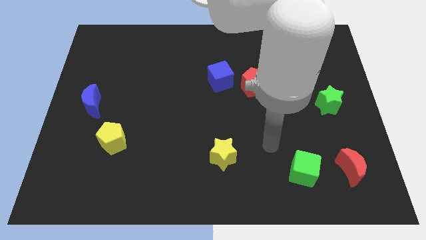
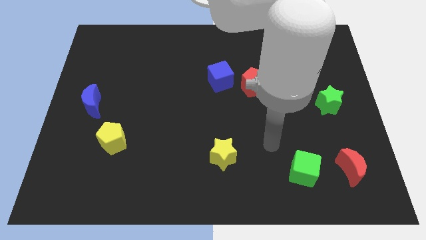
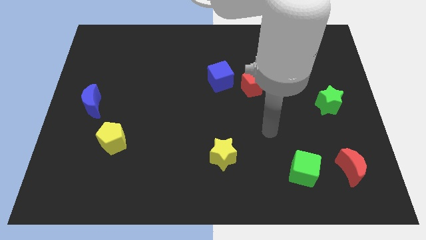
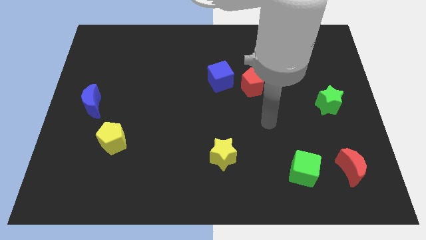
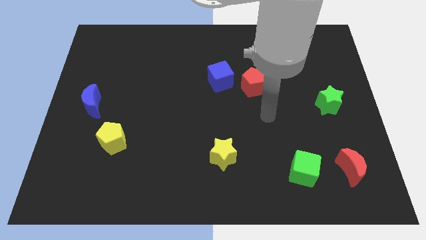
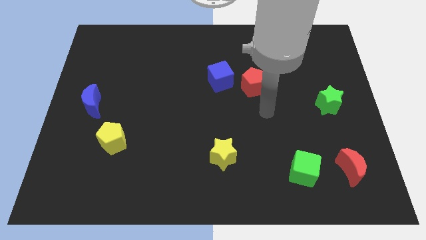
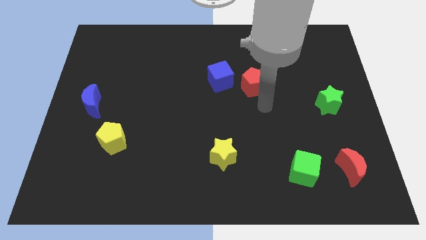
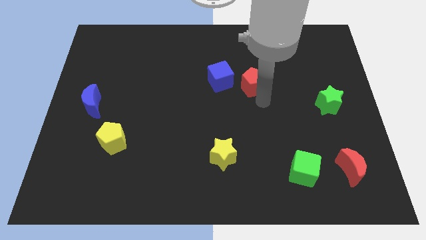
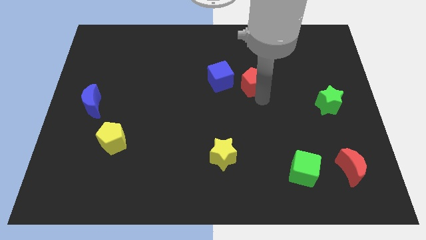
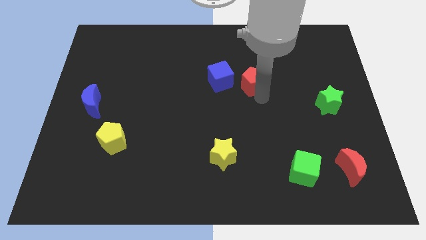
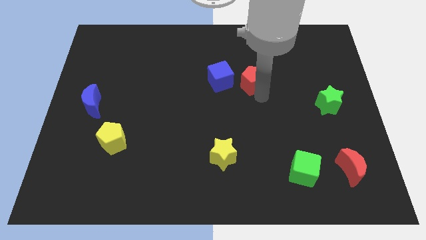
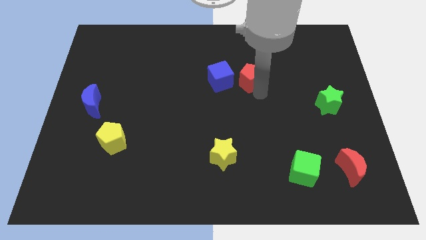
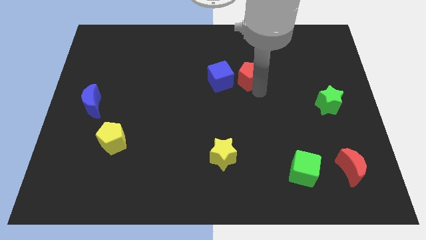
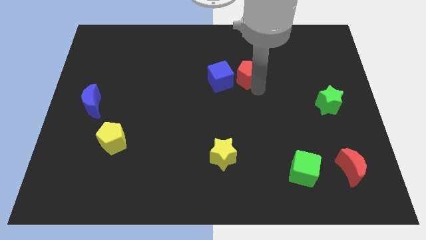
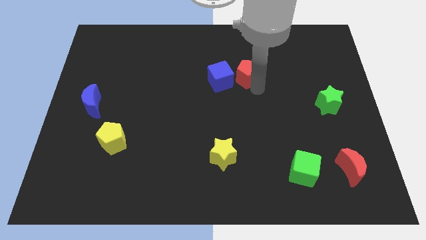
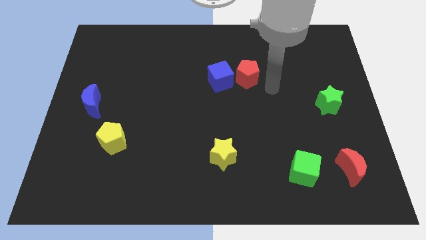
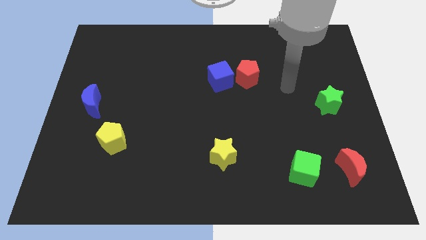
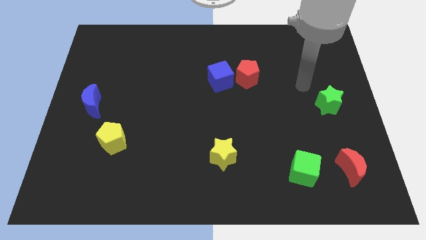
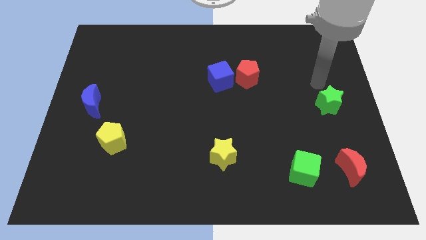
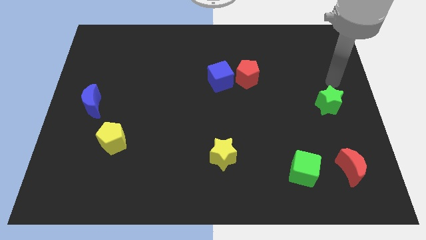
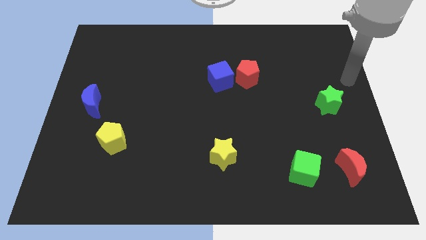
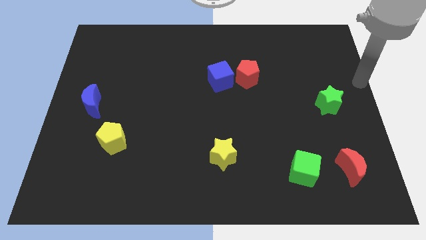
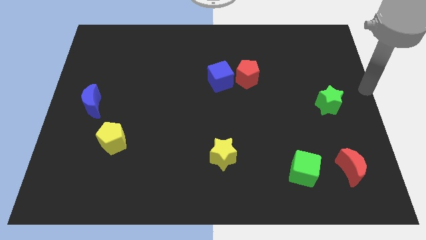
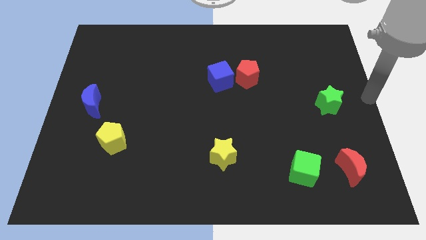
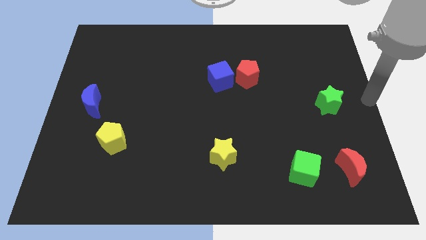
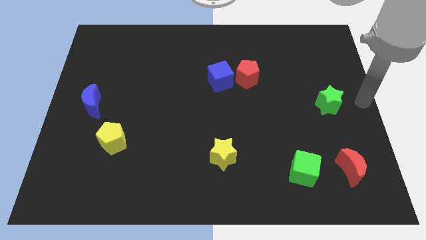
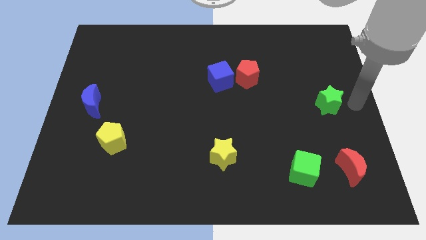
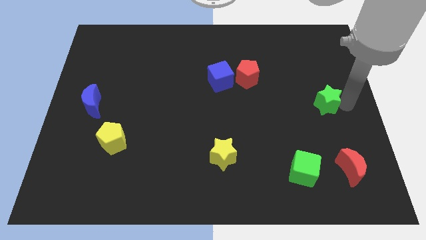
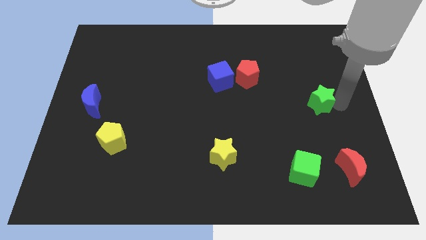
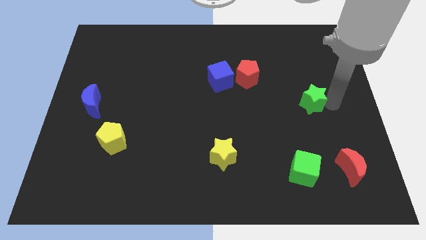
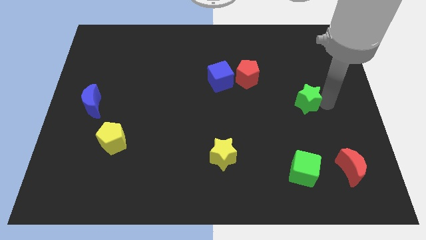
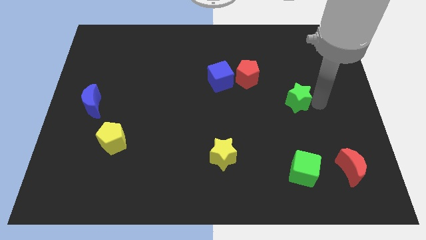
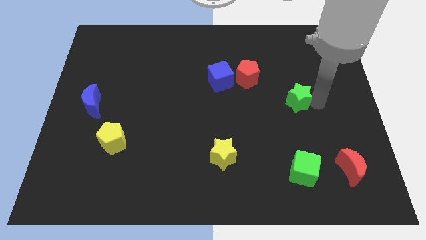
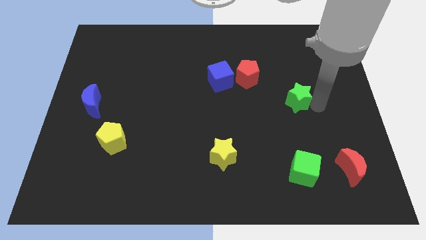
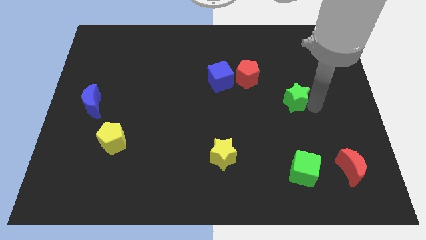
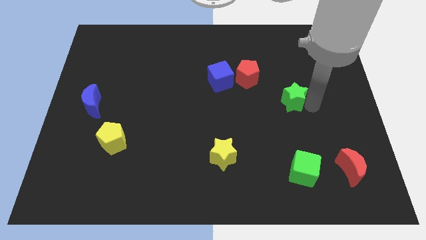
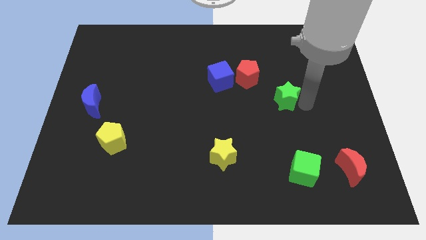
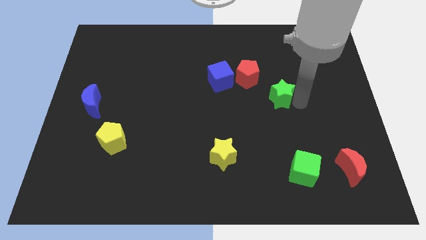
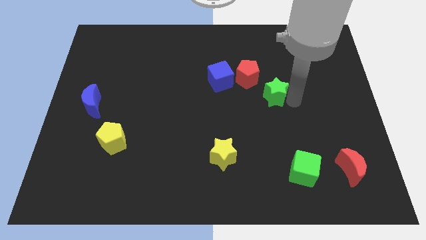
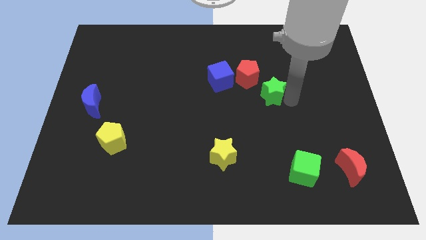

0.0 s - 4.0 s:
move the red pentagon and green star diagonal to each other

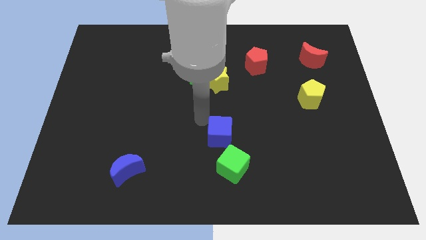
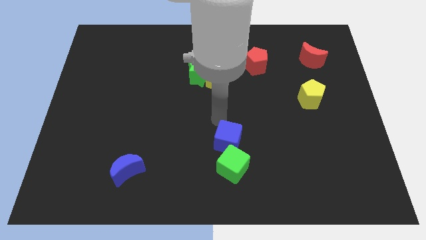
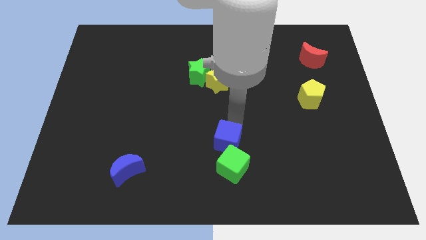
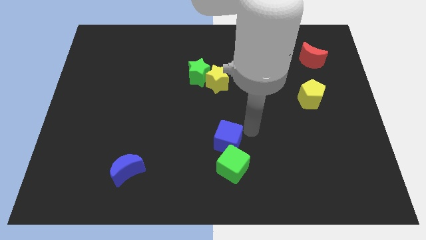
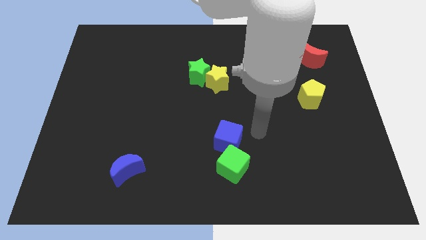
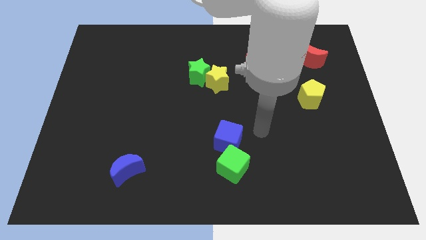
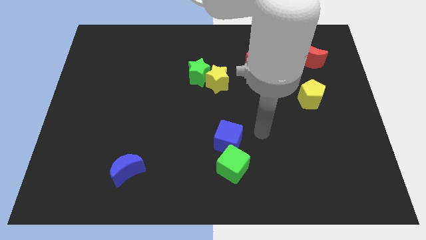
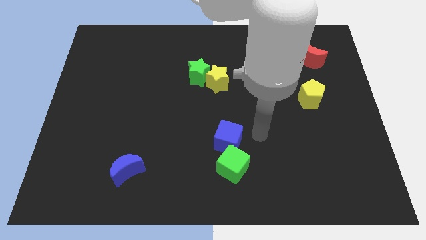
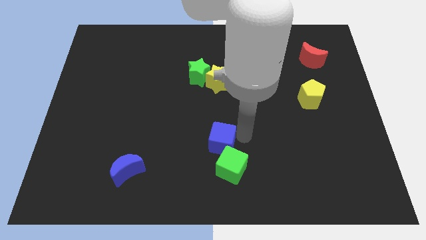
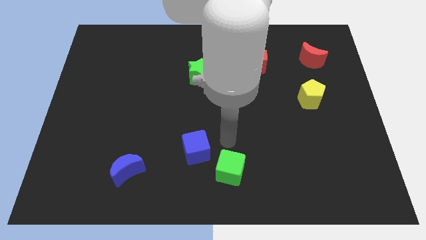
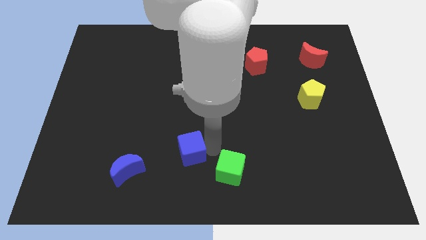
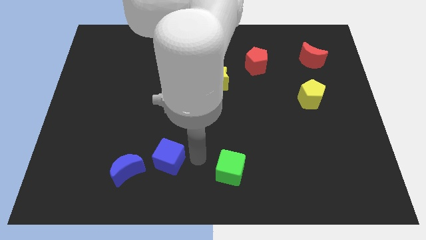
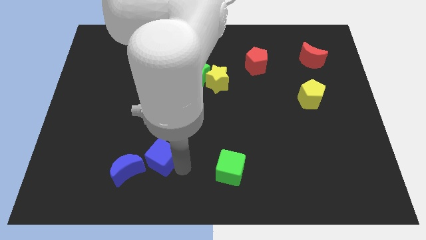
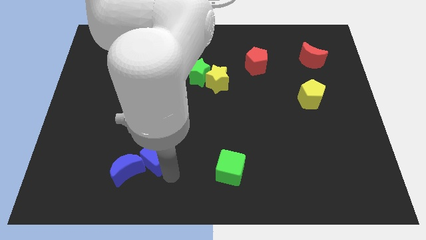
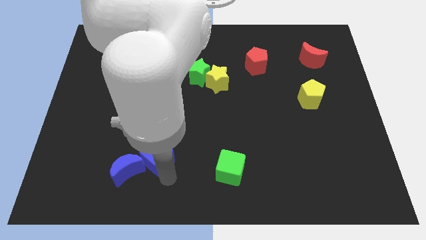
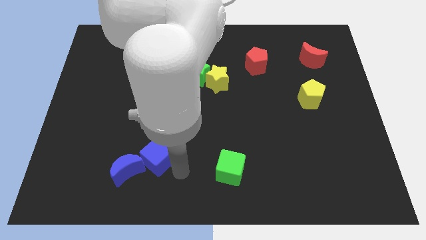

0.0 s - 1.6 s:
push the blue cube into the blue crescent

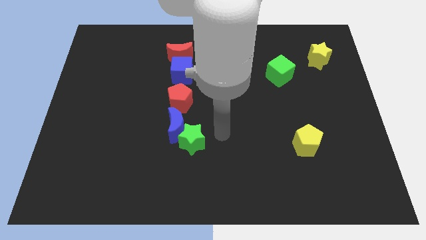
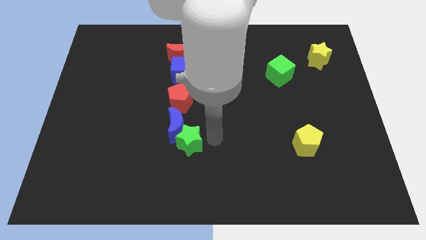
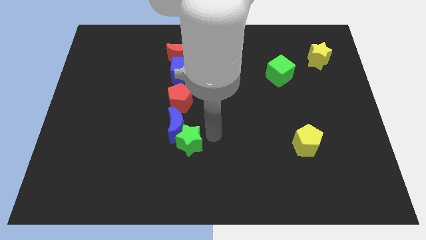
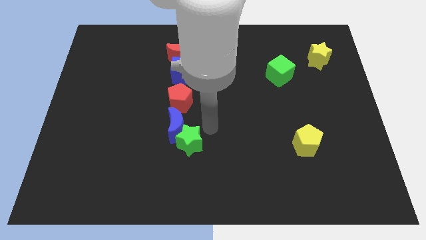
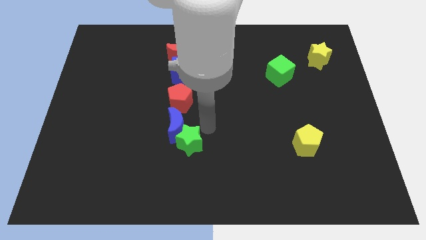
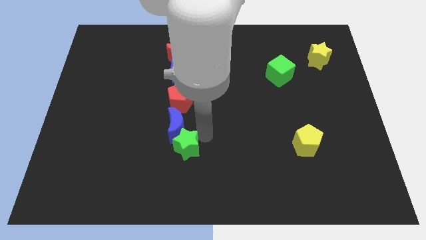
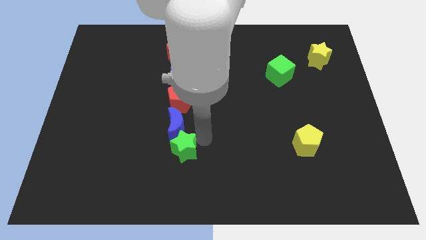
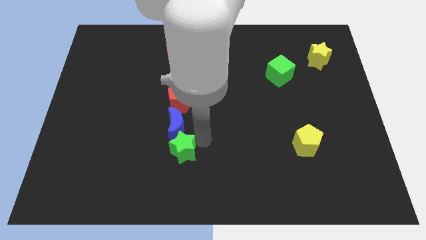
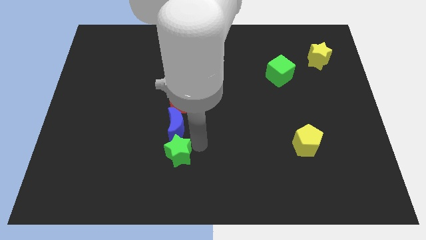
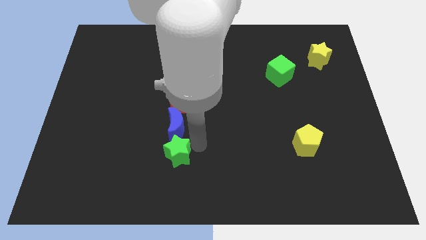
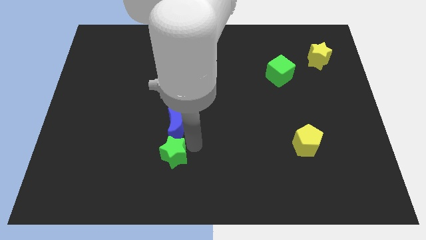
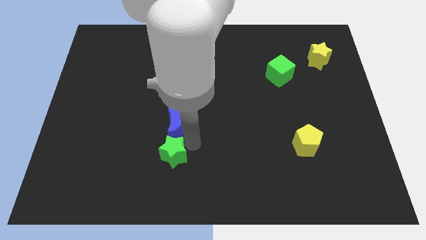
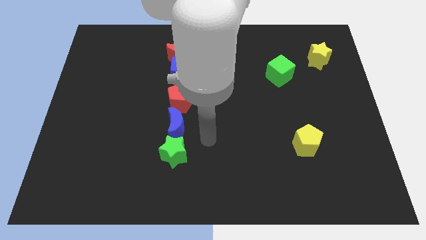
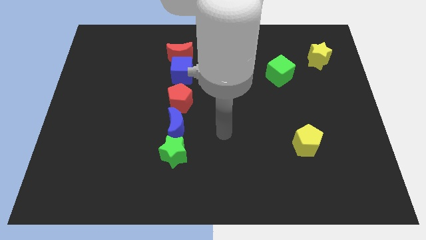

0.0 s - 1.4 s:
move the green star at the bottom of the blue moon

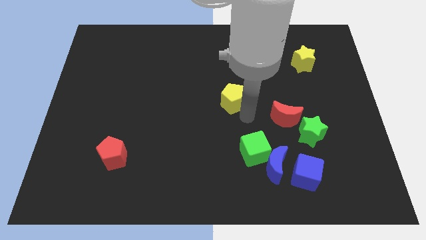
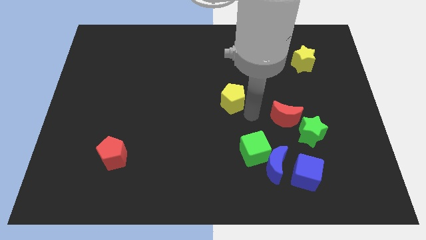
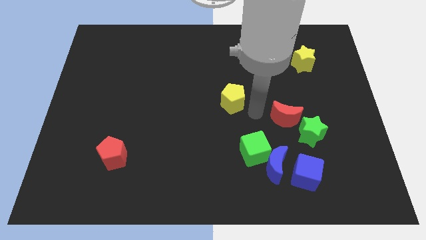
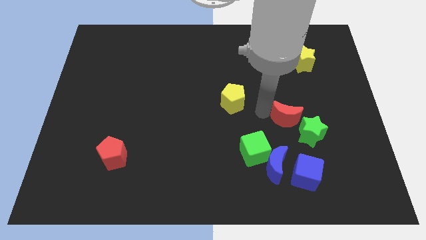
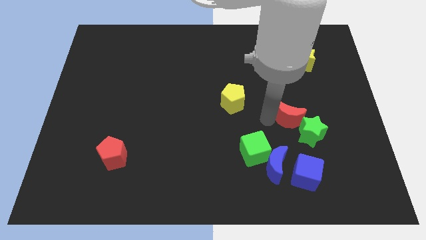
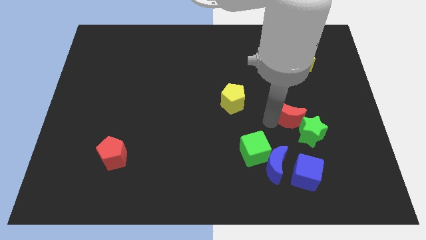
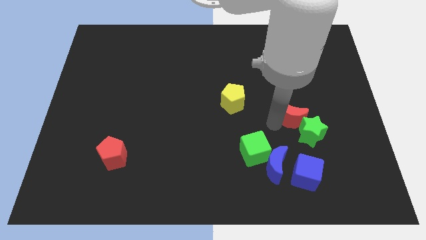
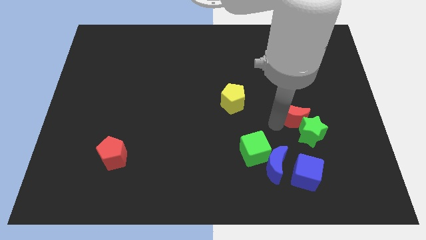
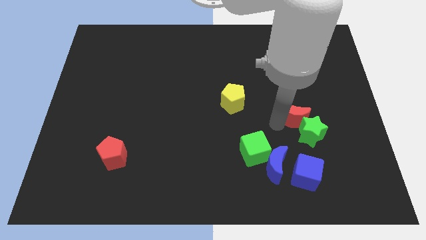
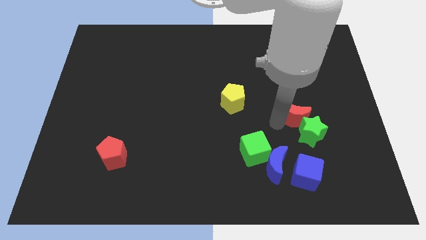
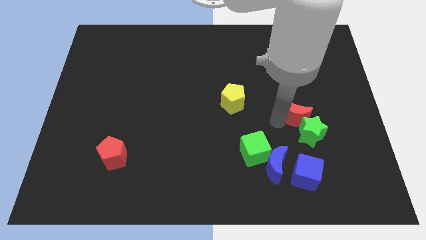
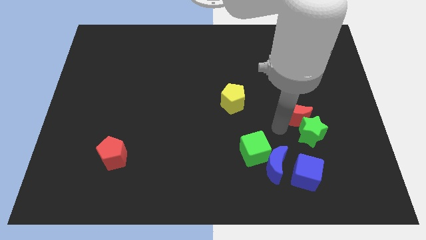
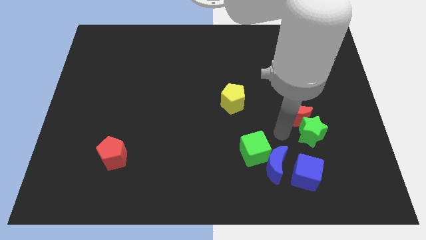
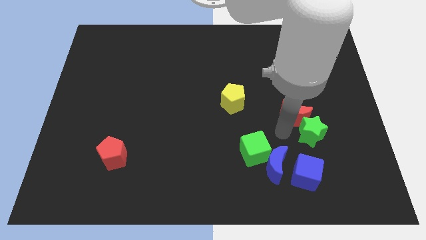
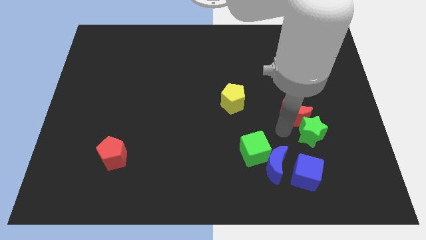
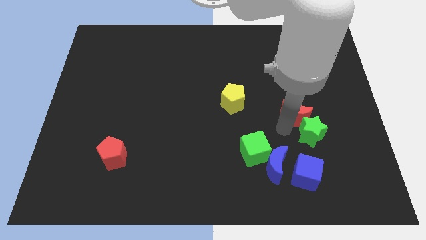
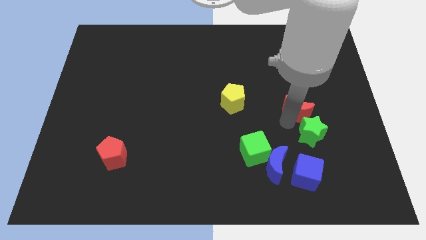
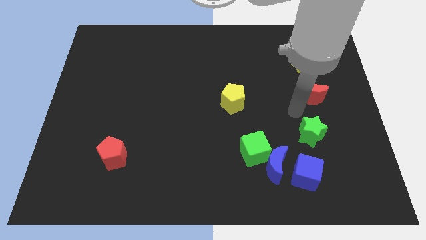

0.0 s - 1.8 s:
slide the red moon vertically below the yellow star
